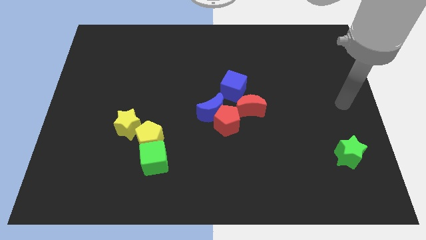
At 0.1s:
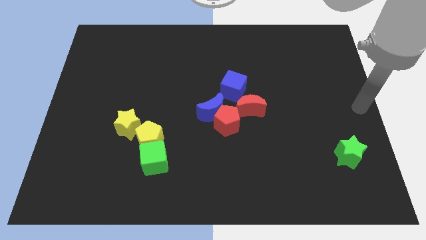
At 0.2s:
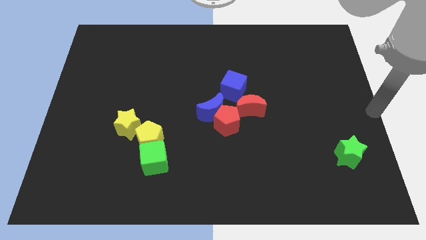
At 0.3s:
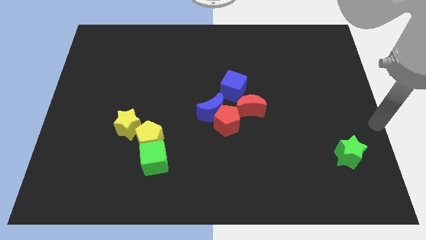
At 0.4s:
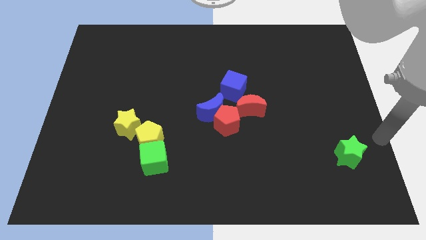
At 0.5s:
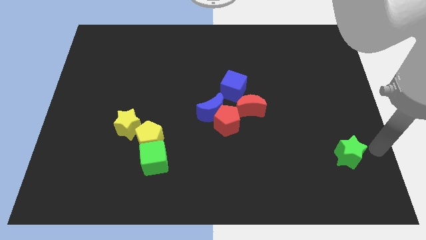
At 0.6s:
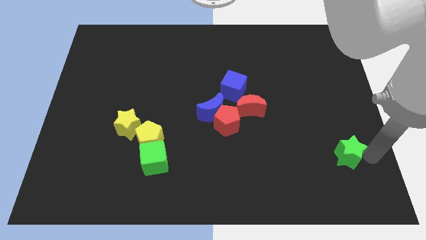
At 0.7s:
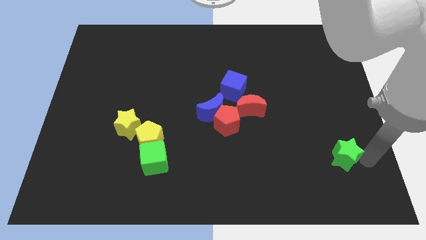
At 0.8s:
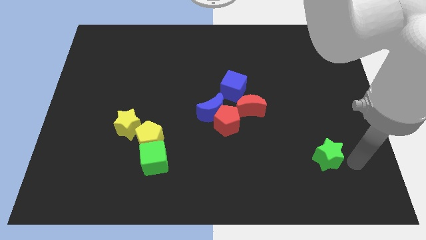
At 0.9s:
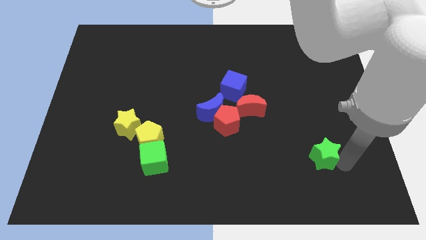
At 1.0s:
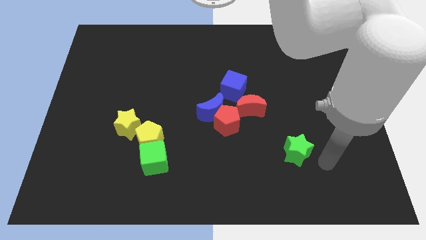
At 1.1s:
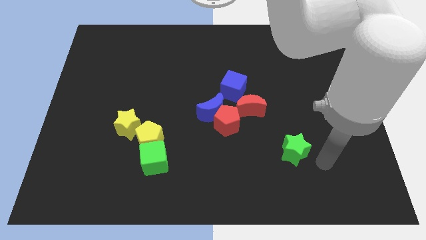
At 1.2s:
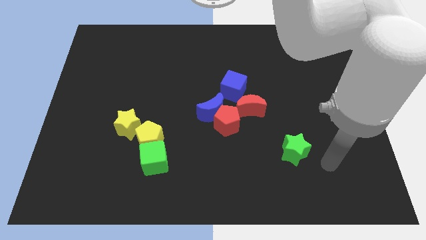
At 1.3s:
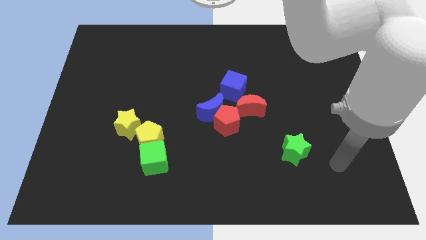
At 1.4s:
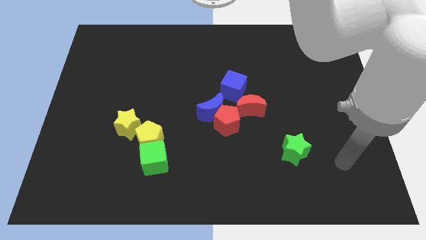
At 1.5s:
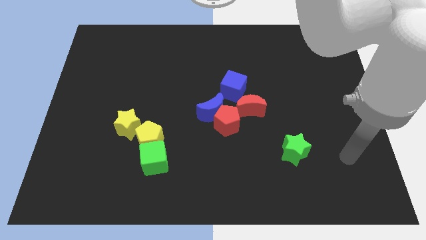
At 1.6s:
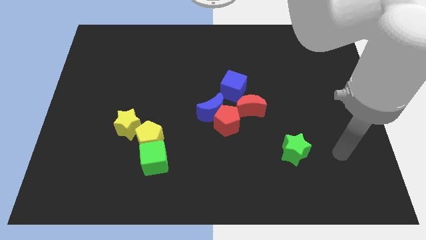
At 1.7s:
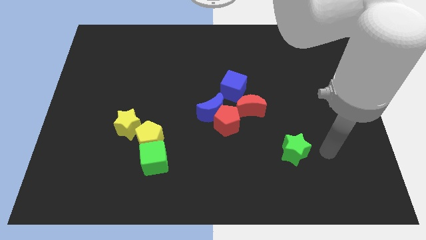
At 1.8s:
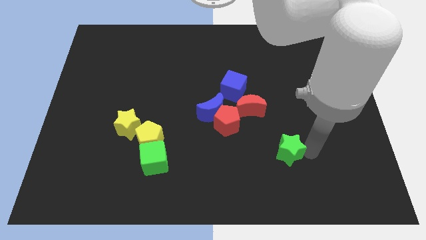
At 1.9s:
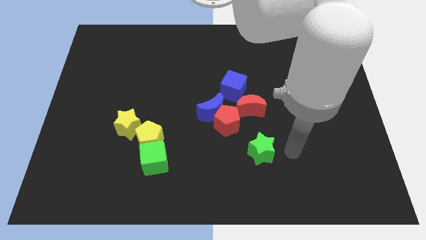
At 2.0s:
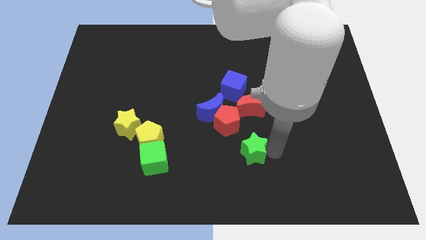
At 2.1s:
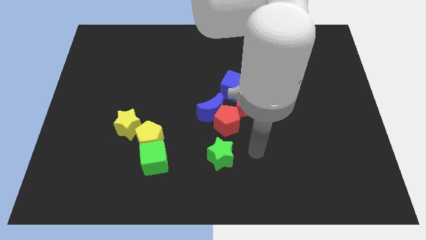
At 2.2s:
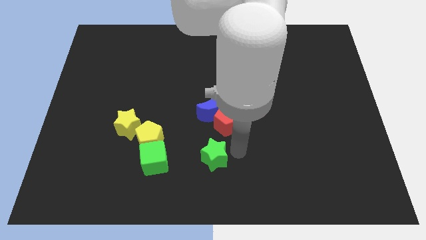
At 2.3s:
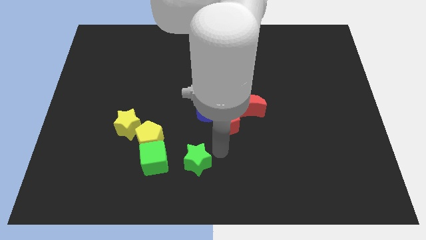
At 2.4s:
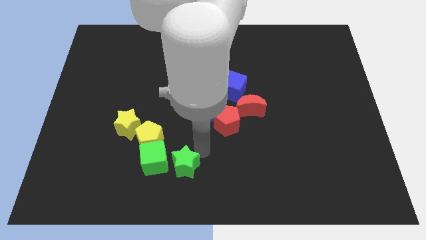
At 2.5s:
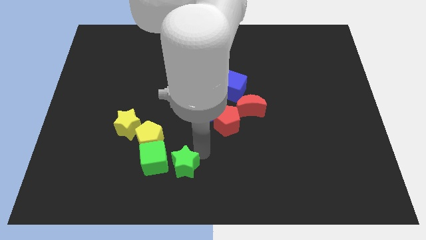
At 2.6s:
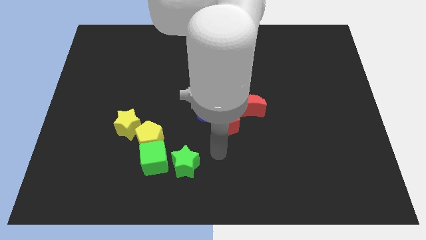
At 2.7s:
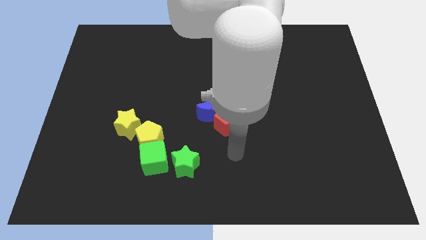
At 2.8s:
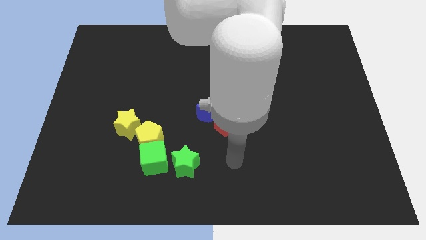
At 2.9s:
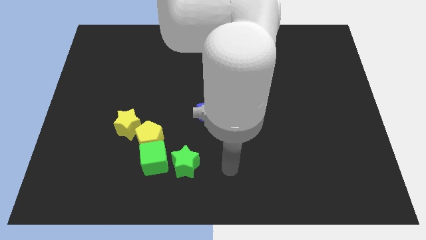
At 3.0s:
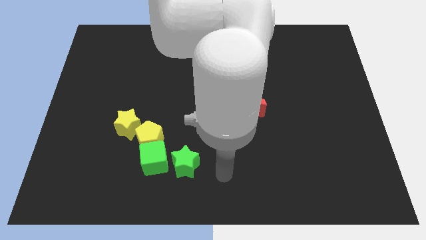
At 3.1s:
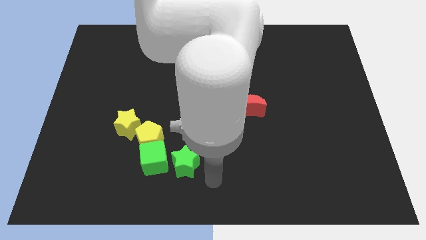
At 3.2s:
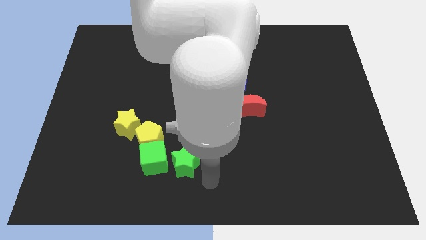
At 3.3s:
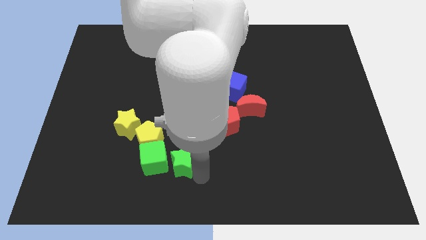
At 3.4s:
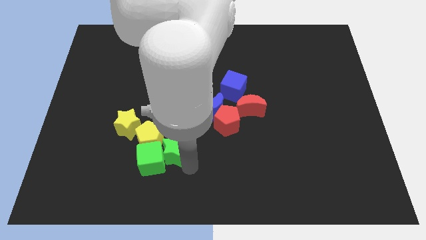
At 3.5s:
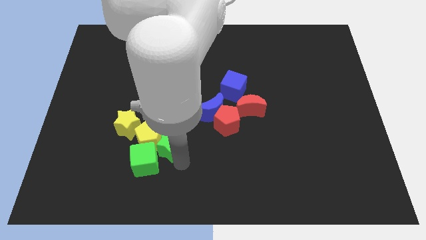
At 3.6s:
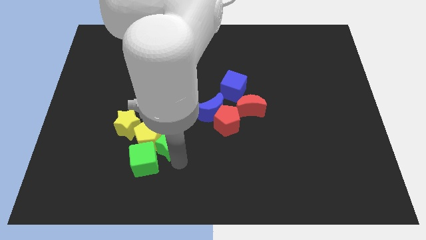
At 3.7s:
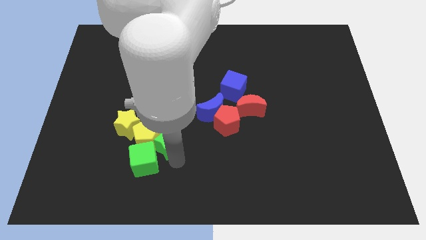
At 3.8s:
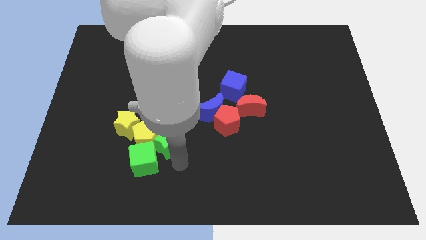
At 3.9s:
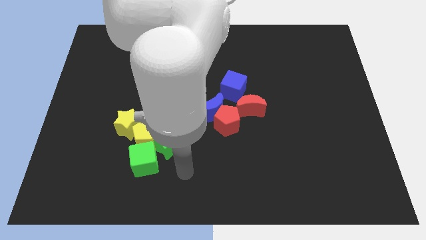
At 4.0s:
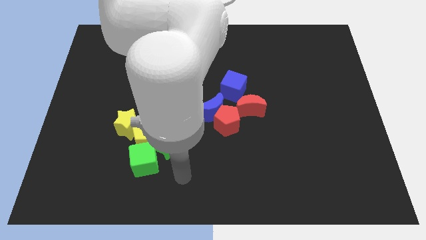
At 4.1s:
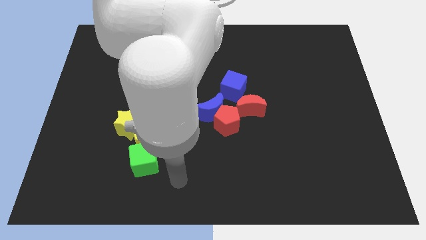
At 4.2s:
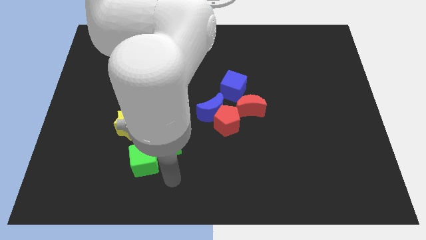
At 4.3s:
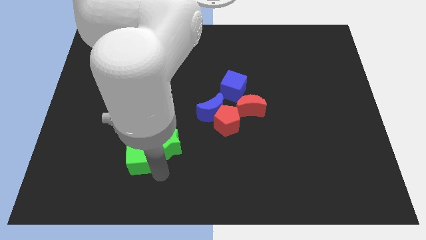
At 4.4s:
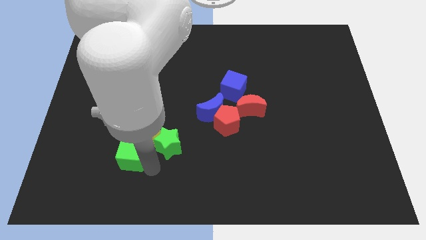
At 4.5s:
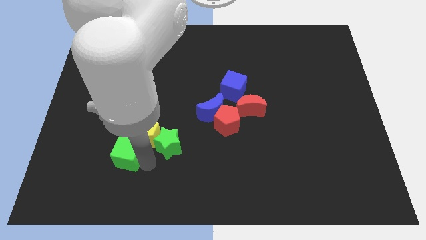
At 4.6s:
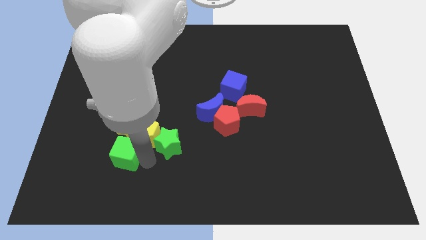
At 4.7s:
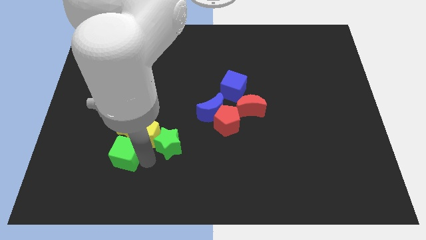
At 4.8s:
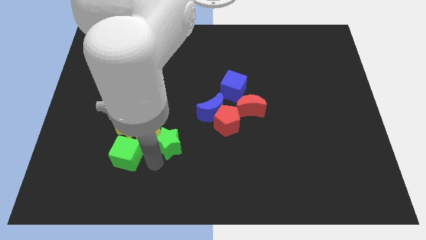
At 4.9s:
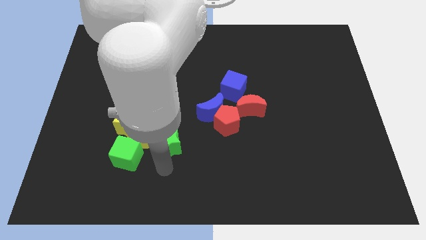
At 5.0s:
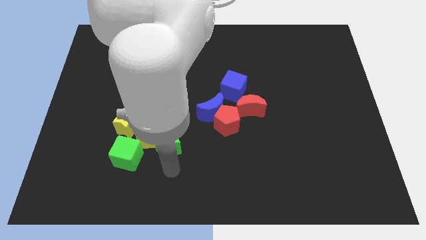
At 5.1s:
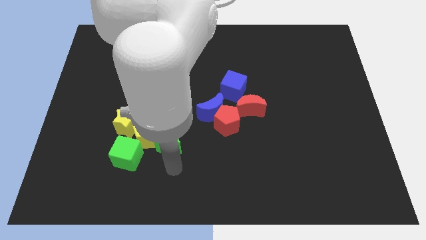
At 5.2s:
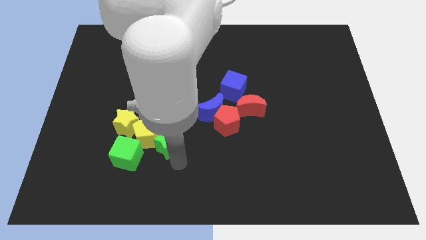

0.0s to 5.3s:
push the bottom right green star into the green cube

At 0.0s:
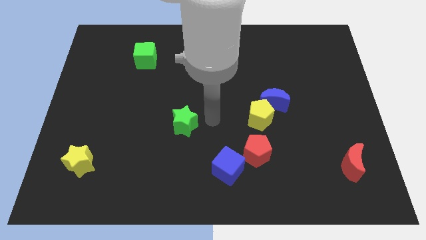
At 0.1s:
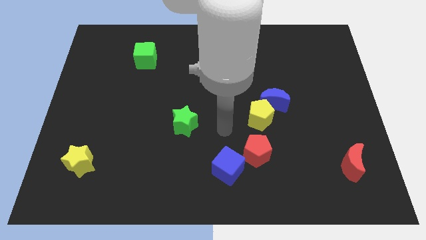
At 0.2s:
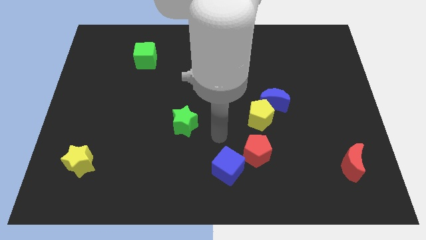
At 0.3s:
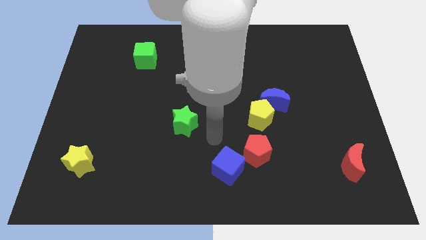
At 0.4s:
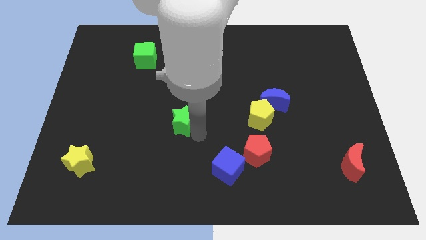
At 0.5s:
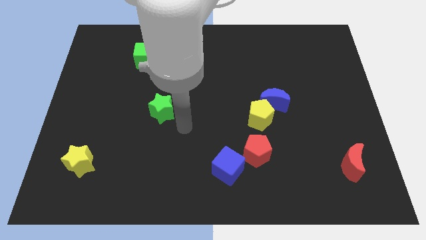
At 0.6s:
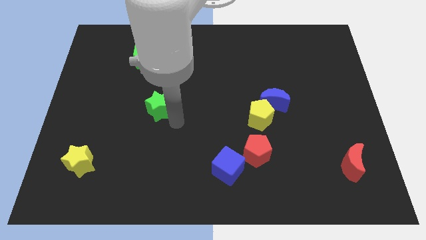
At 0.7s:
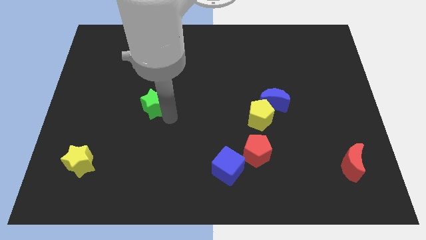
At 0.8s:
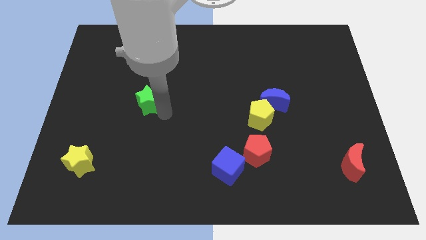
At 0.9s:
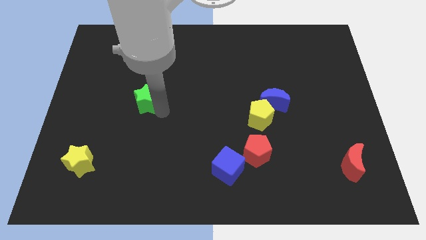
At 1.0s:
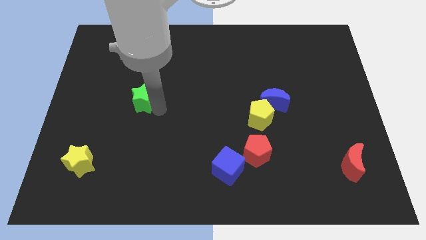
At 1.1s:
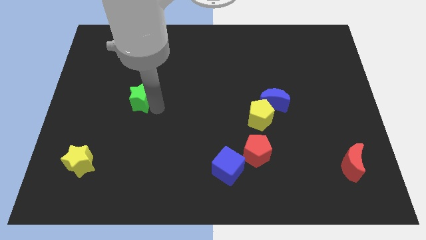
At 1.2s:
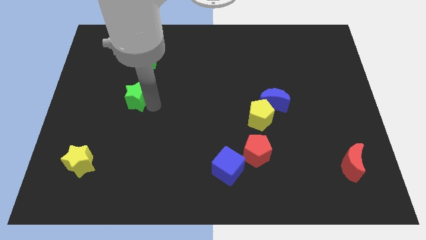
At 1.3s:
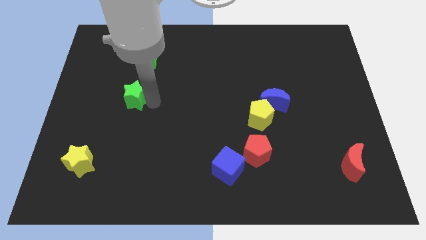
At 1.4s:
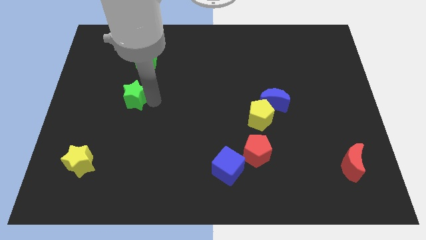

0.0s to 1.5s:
push the green star to the bottom of the green cube

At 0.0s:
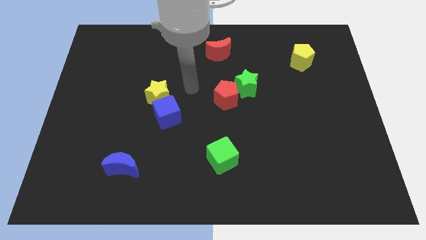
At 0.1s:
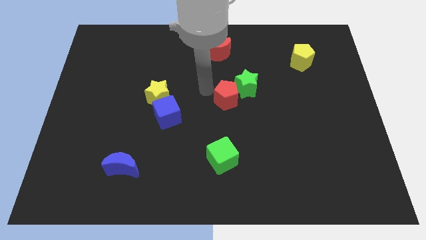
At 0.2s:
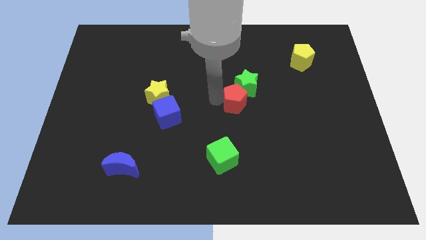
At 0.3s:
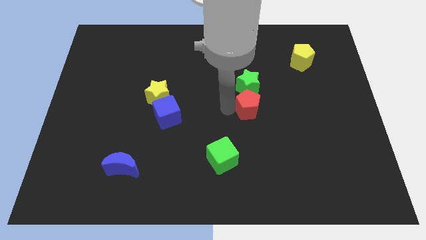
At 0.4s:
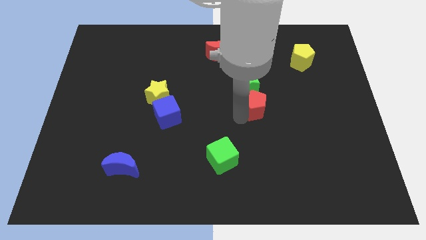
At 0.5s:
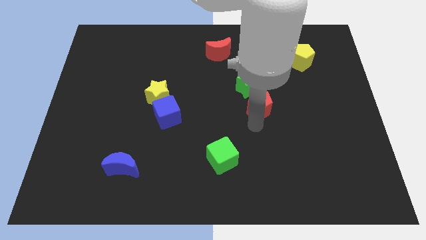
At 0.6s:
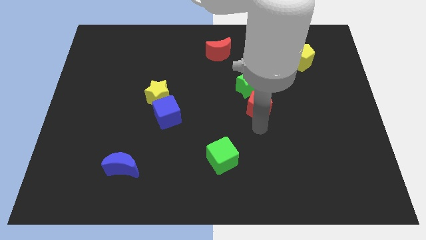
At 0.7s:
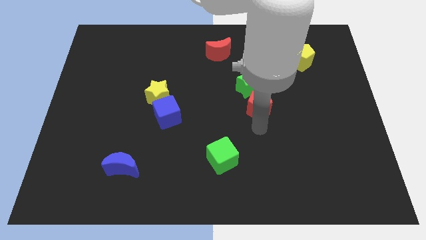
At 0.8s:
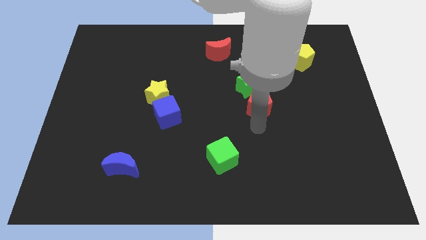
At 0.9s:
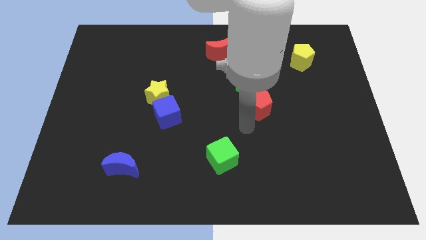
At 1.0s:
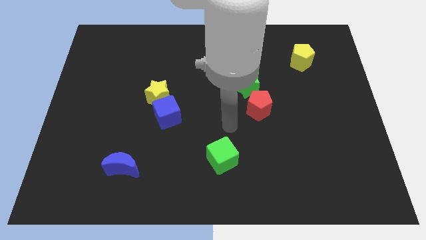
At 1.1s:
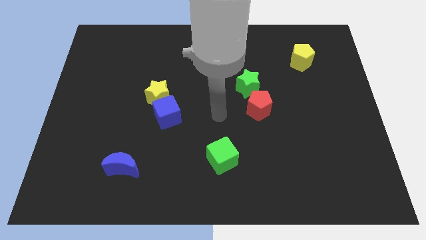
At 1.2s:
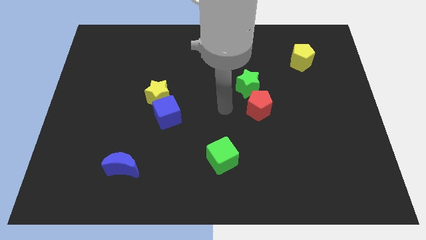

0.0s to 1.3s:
put the red pentagon diagonally in between the green cube and the yellow pentagon

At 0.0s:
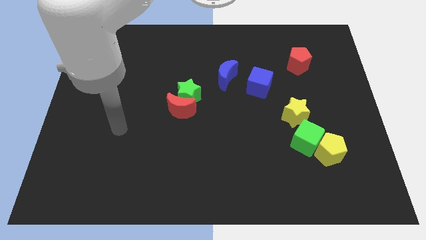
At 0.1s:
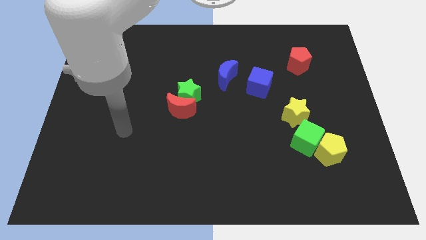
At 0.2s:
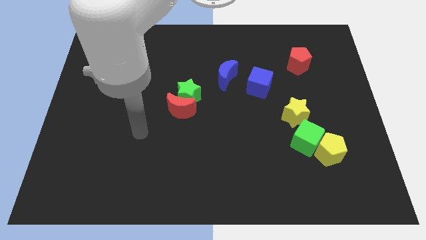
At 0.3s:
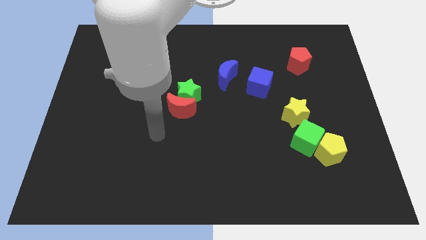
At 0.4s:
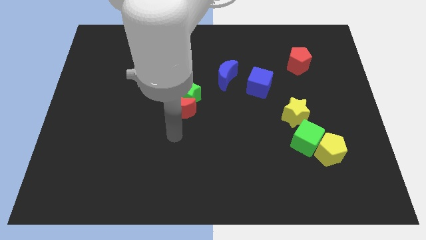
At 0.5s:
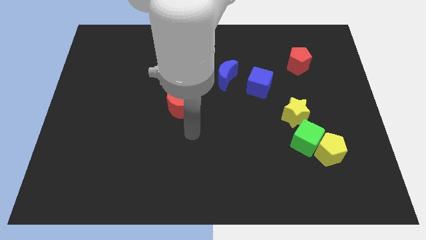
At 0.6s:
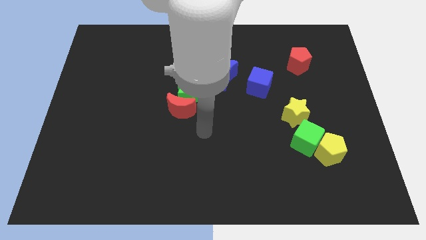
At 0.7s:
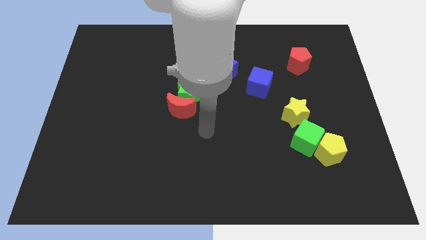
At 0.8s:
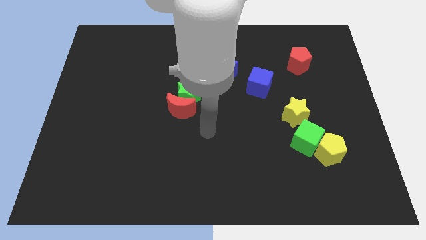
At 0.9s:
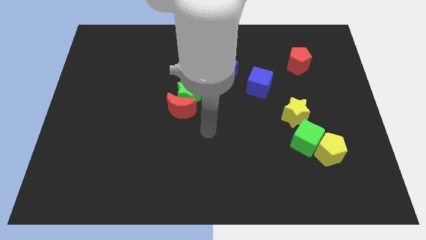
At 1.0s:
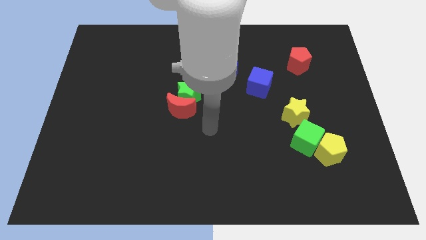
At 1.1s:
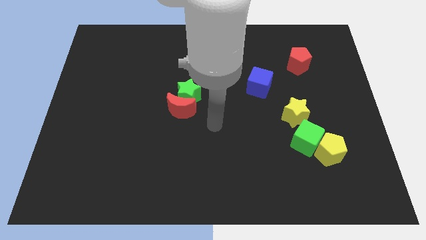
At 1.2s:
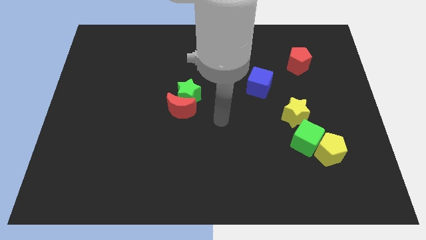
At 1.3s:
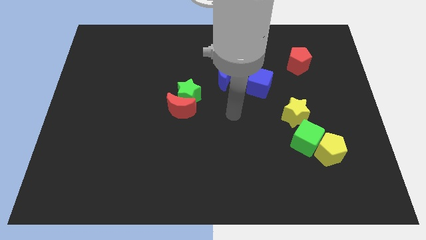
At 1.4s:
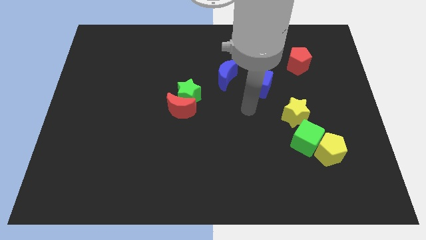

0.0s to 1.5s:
point the arm at the center of the board
